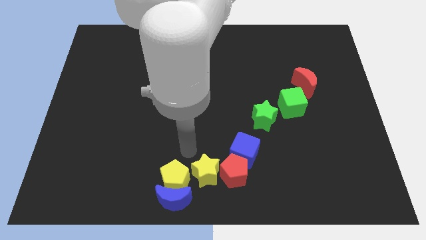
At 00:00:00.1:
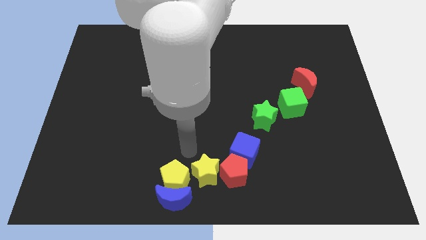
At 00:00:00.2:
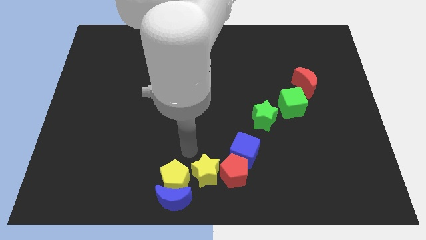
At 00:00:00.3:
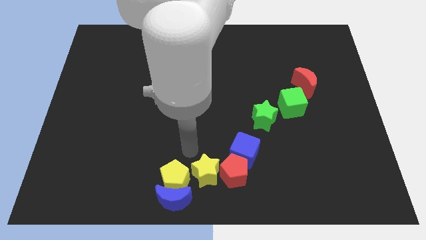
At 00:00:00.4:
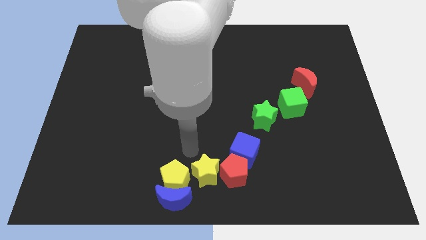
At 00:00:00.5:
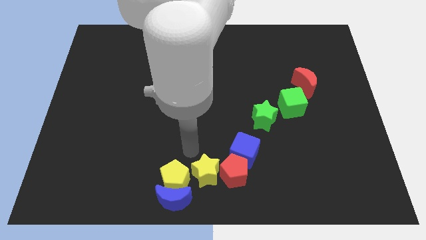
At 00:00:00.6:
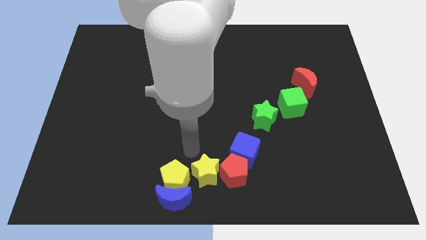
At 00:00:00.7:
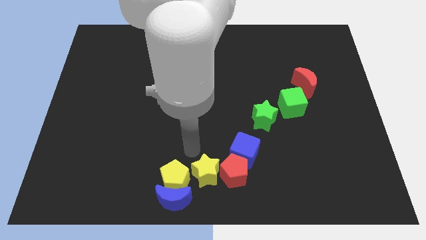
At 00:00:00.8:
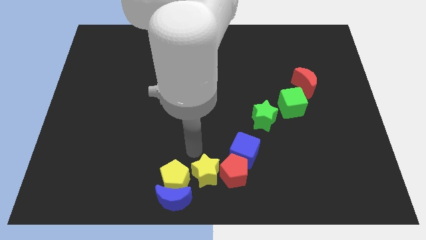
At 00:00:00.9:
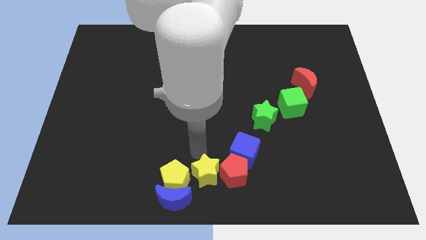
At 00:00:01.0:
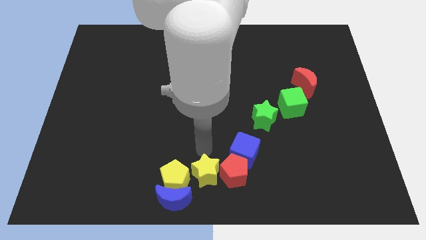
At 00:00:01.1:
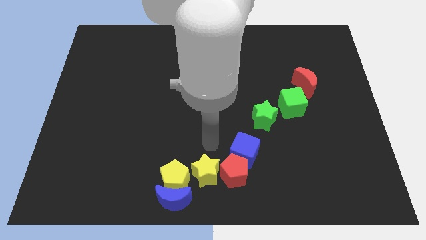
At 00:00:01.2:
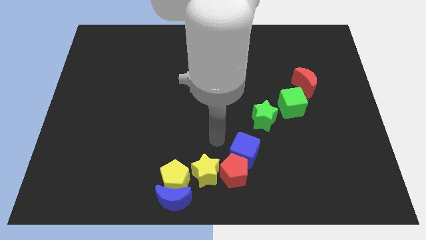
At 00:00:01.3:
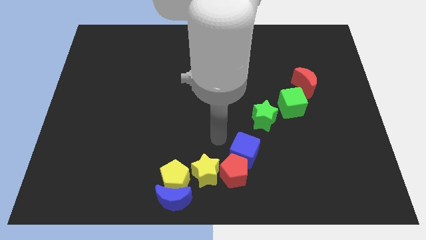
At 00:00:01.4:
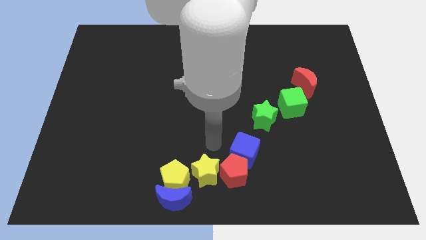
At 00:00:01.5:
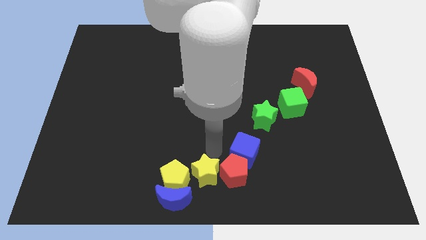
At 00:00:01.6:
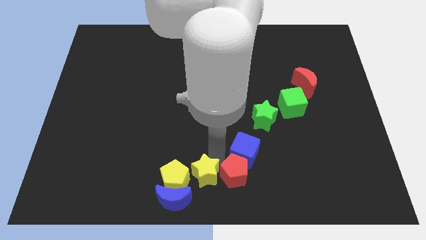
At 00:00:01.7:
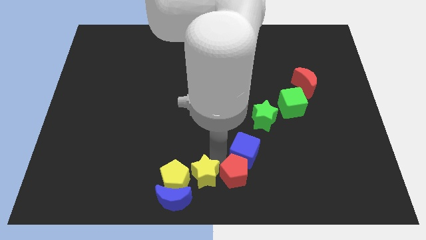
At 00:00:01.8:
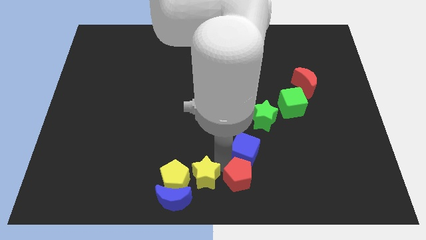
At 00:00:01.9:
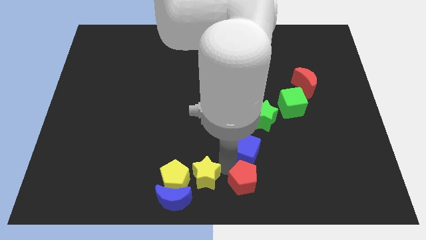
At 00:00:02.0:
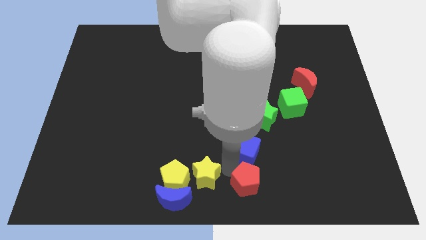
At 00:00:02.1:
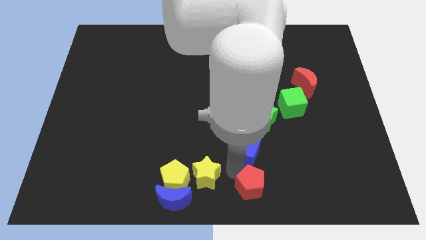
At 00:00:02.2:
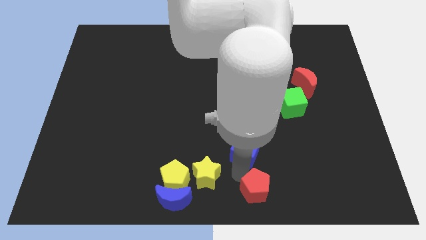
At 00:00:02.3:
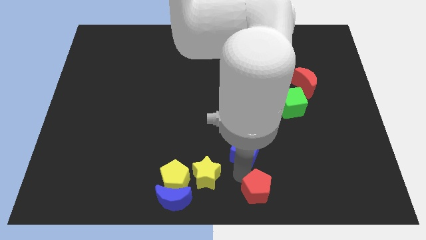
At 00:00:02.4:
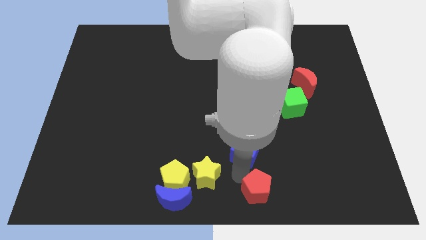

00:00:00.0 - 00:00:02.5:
separate red pentagon from the yellow star and blue cube

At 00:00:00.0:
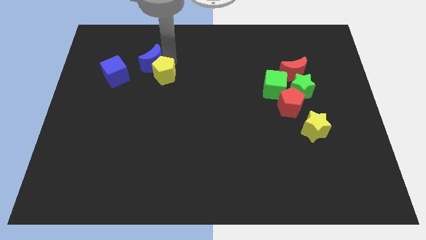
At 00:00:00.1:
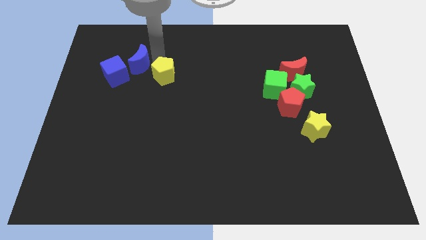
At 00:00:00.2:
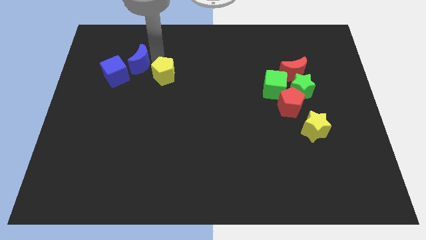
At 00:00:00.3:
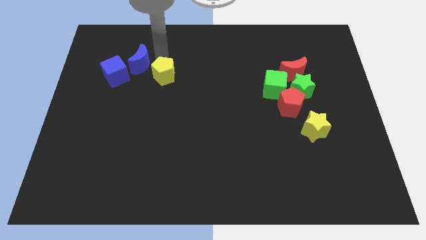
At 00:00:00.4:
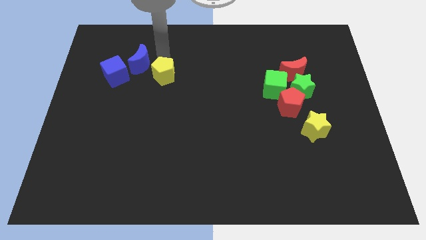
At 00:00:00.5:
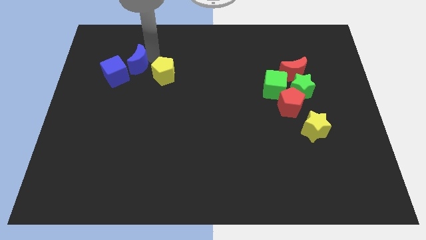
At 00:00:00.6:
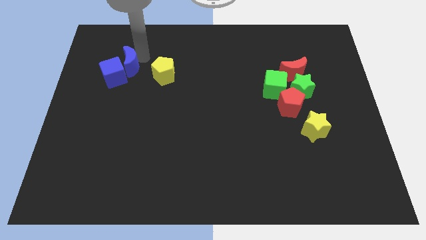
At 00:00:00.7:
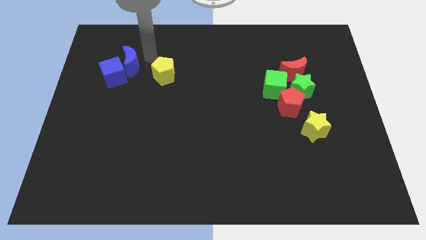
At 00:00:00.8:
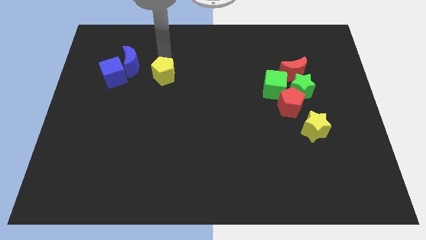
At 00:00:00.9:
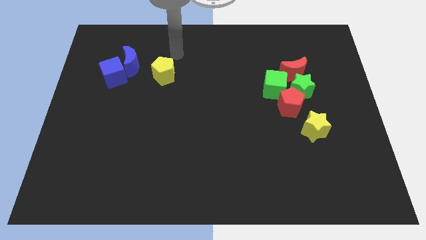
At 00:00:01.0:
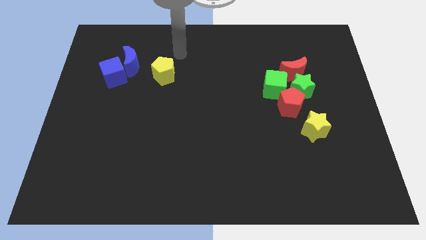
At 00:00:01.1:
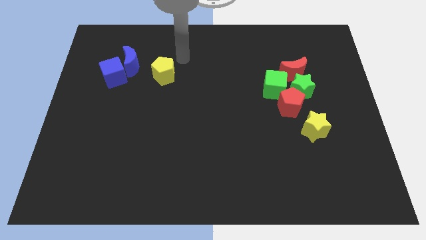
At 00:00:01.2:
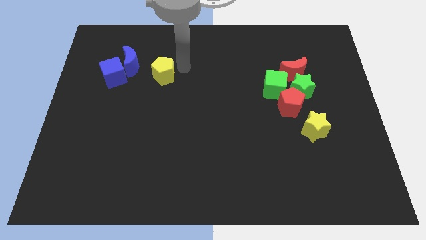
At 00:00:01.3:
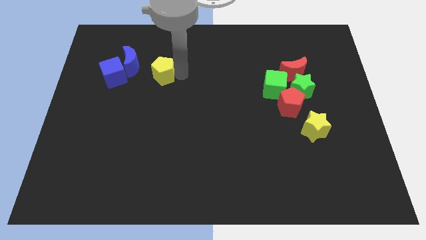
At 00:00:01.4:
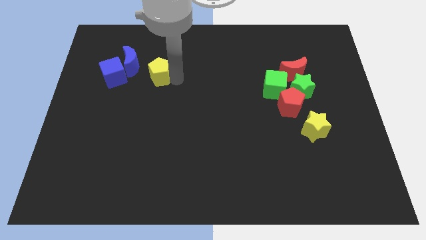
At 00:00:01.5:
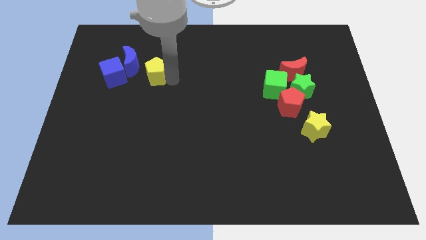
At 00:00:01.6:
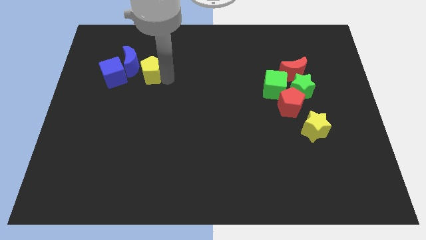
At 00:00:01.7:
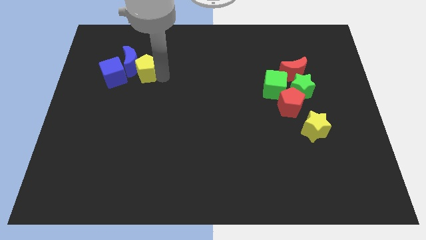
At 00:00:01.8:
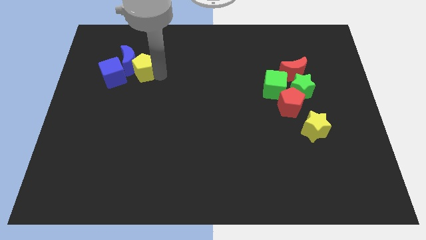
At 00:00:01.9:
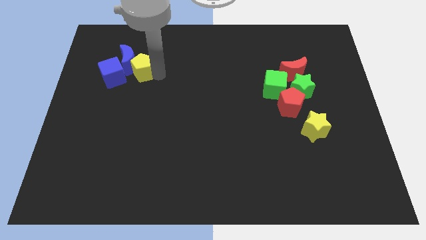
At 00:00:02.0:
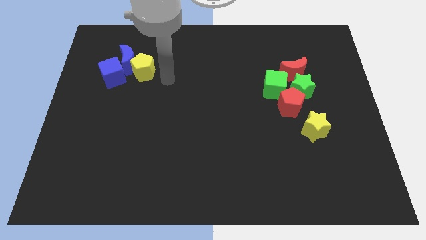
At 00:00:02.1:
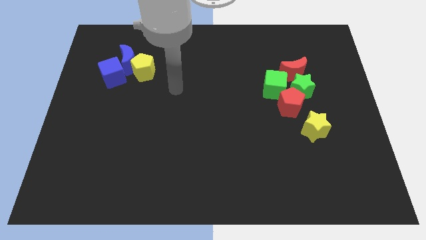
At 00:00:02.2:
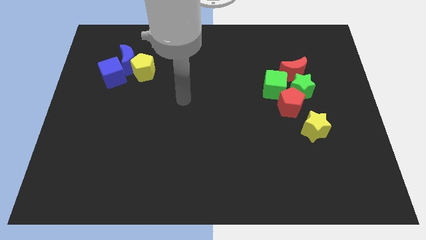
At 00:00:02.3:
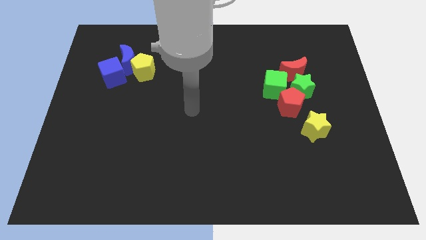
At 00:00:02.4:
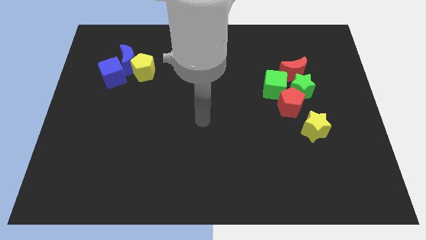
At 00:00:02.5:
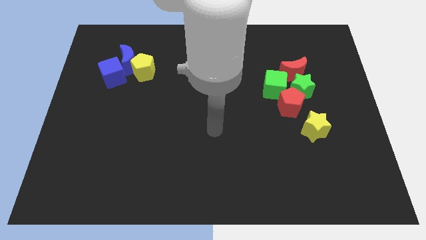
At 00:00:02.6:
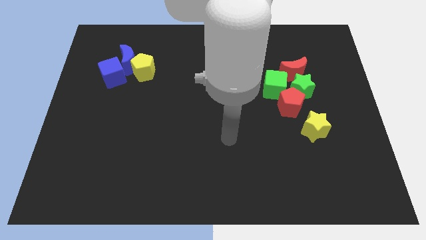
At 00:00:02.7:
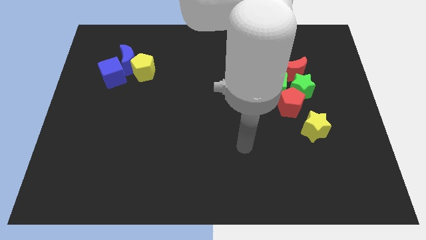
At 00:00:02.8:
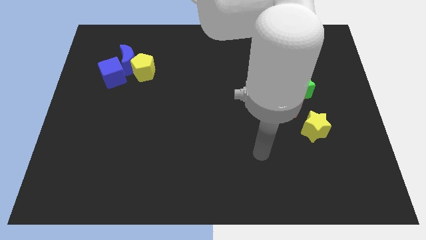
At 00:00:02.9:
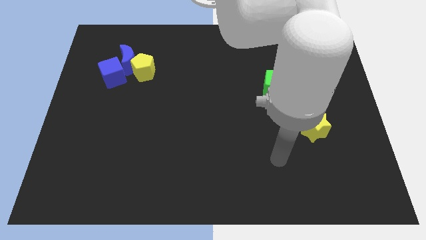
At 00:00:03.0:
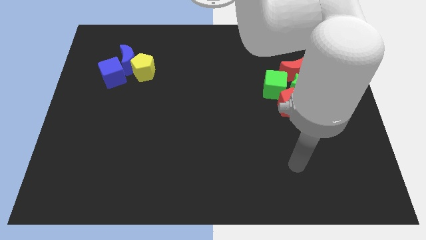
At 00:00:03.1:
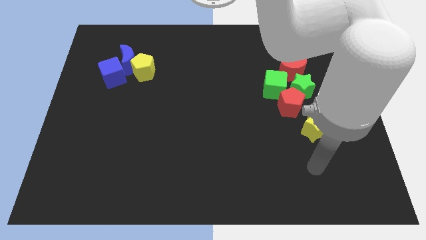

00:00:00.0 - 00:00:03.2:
group the yellow pentagon and blue blocks at the top left of the board

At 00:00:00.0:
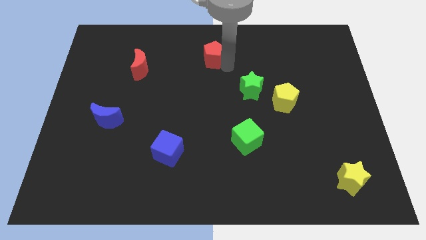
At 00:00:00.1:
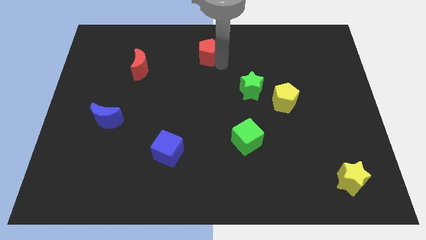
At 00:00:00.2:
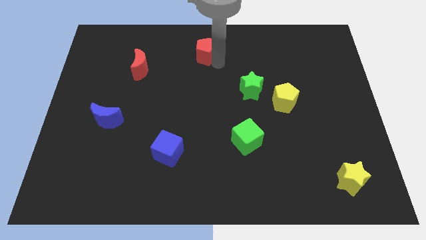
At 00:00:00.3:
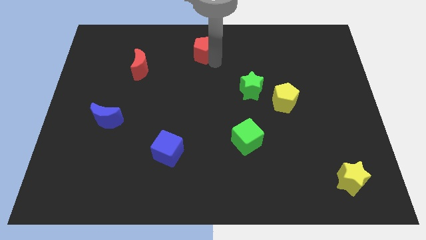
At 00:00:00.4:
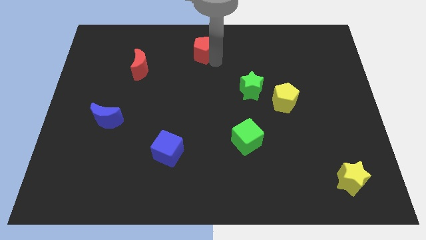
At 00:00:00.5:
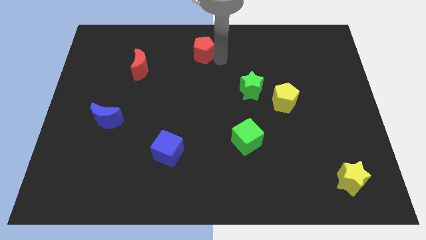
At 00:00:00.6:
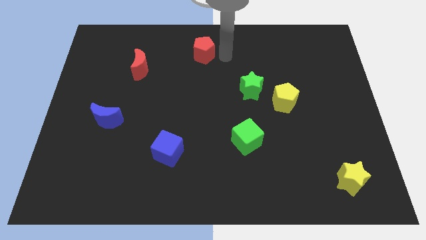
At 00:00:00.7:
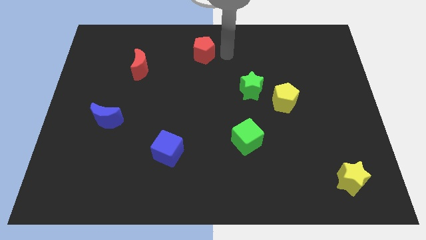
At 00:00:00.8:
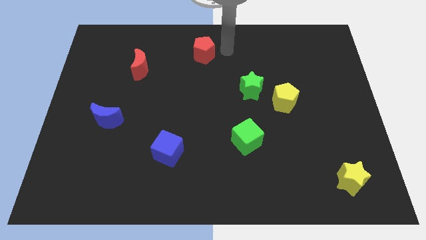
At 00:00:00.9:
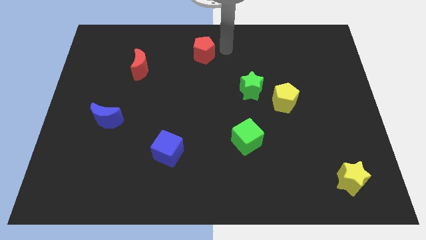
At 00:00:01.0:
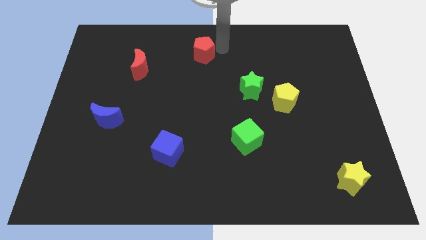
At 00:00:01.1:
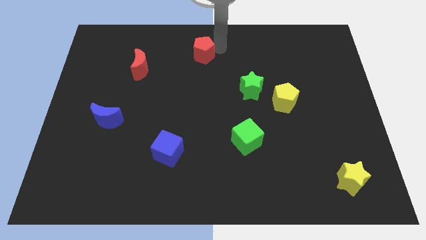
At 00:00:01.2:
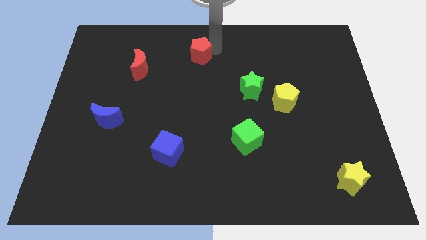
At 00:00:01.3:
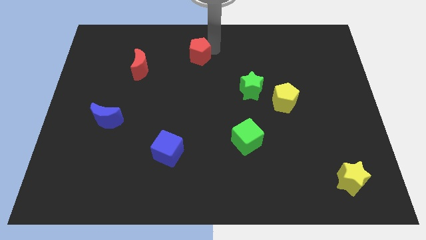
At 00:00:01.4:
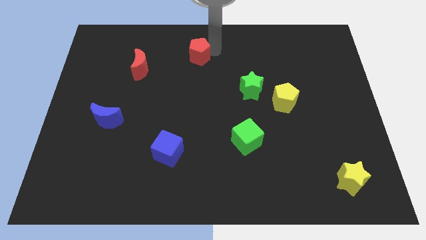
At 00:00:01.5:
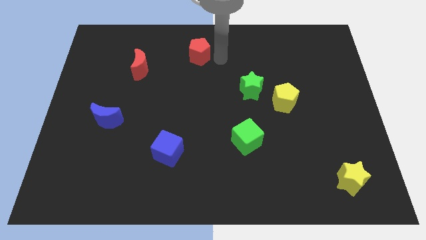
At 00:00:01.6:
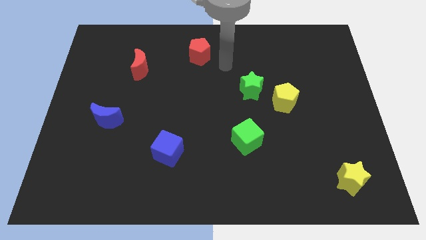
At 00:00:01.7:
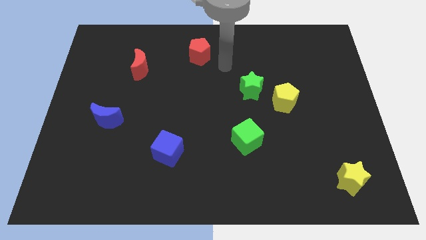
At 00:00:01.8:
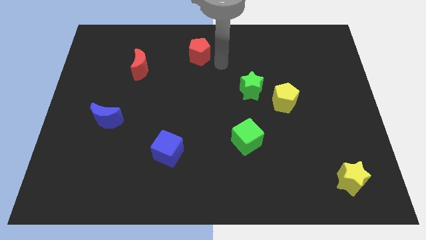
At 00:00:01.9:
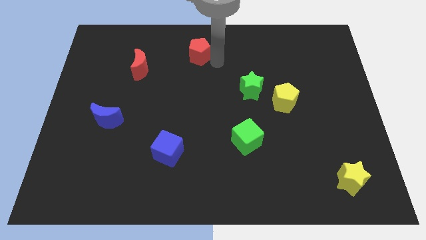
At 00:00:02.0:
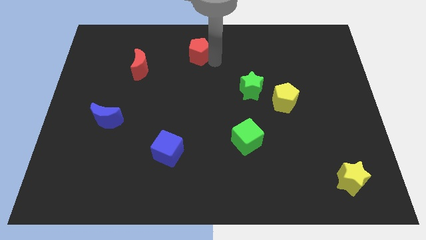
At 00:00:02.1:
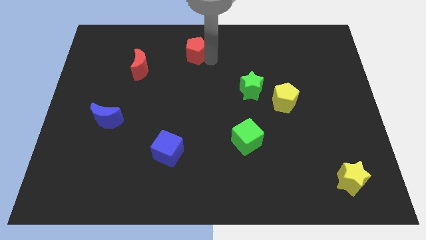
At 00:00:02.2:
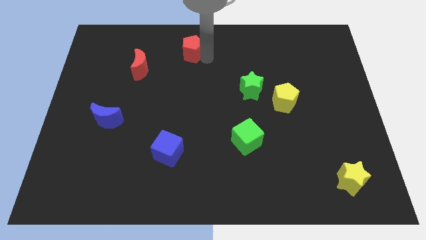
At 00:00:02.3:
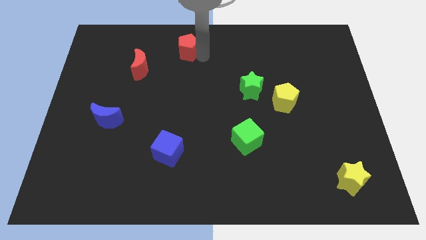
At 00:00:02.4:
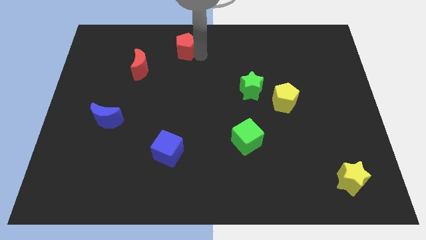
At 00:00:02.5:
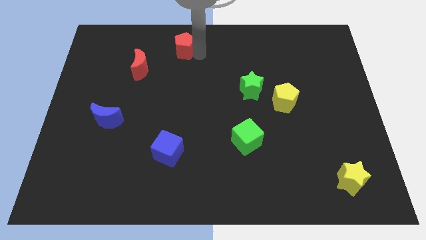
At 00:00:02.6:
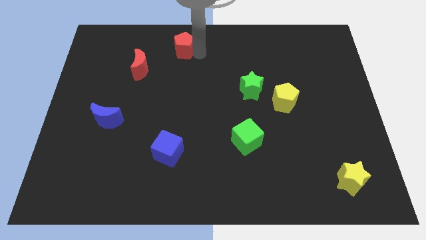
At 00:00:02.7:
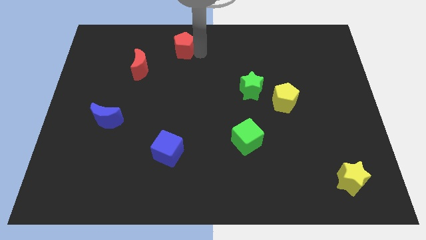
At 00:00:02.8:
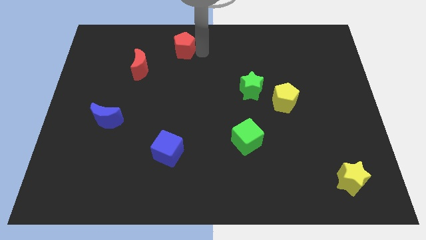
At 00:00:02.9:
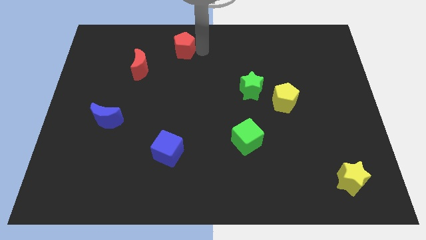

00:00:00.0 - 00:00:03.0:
push the red pentagon towards left side of the board

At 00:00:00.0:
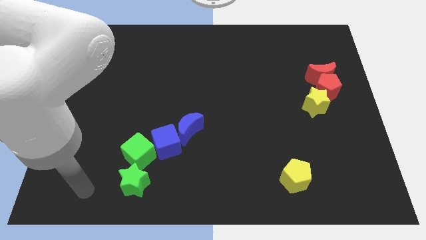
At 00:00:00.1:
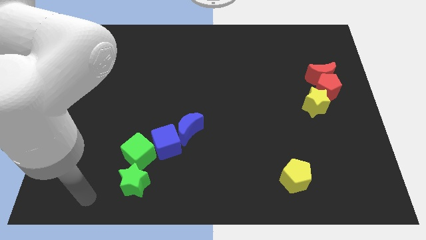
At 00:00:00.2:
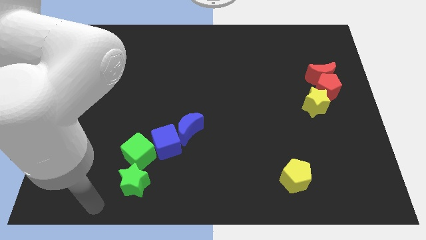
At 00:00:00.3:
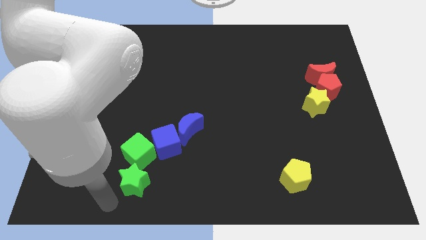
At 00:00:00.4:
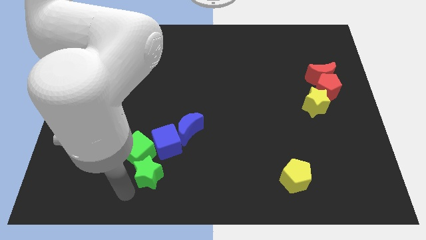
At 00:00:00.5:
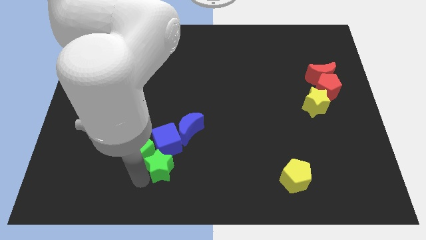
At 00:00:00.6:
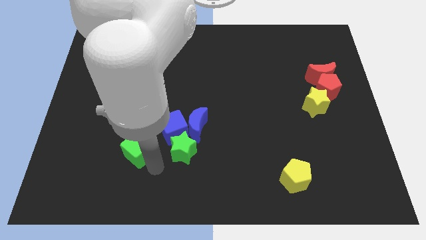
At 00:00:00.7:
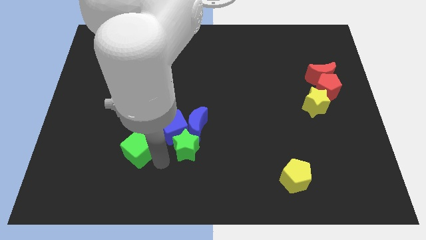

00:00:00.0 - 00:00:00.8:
push the green star right of the blue block
